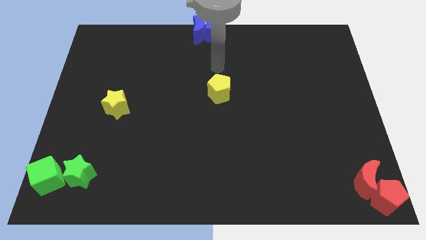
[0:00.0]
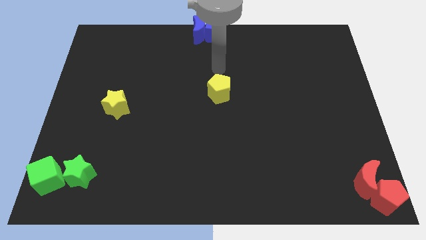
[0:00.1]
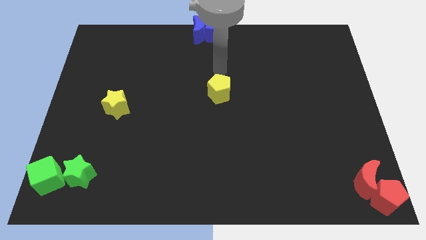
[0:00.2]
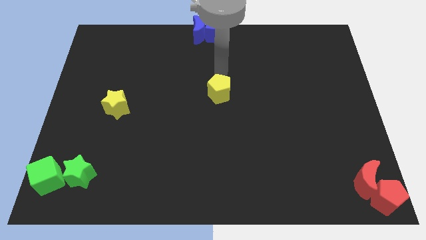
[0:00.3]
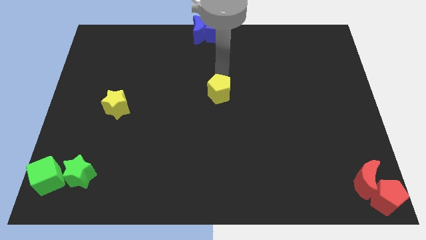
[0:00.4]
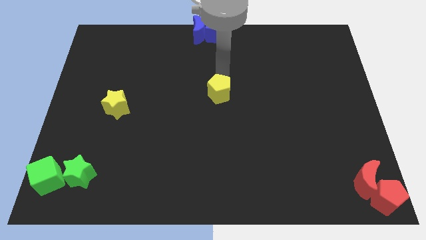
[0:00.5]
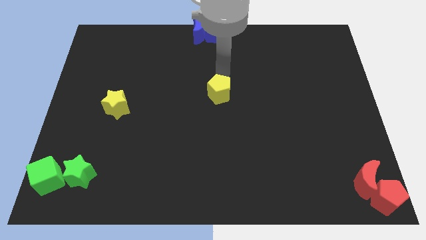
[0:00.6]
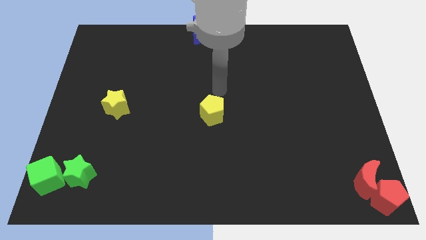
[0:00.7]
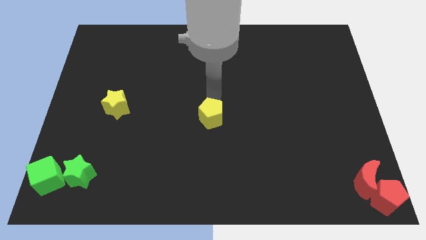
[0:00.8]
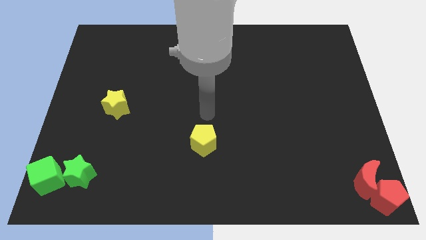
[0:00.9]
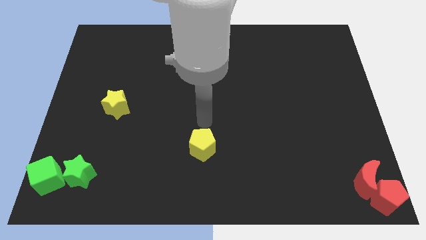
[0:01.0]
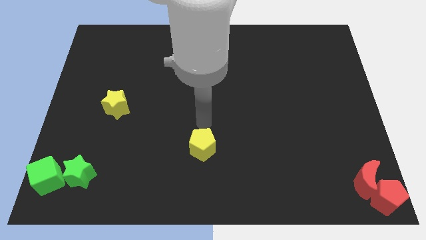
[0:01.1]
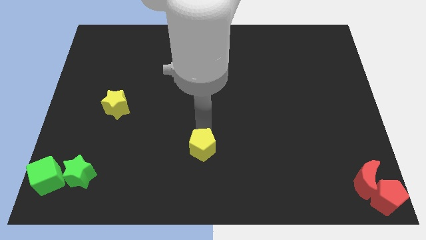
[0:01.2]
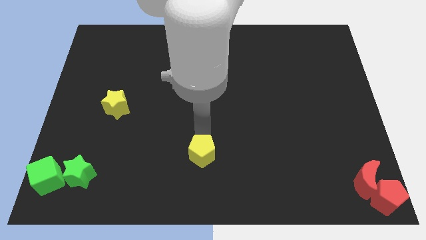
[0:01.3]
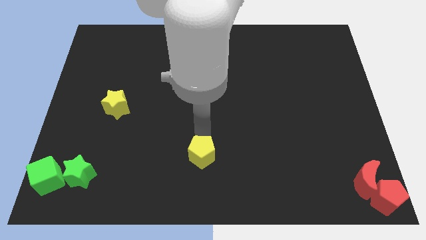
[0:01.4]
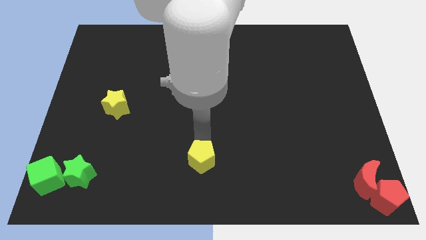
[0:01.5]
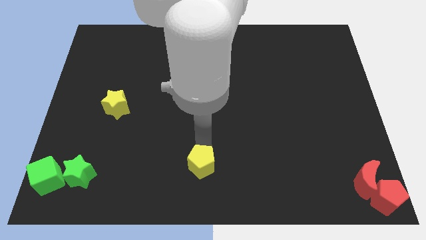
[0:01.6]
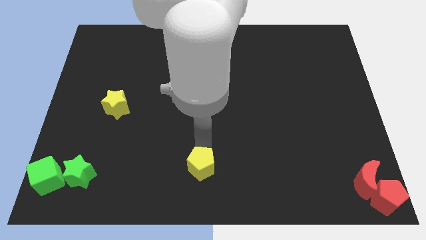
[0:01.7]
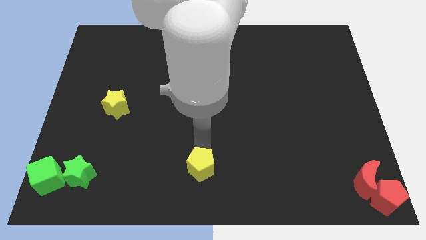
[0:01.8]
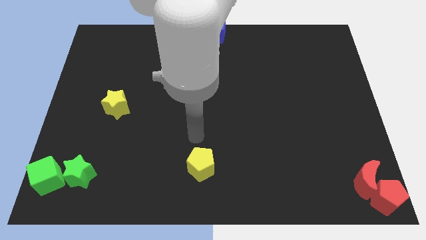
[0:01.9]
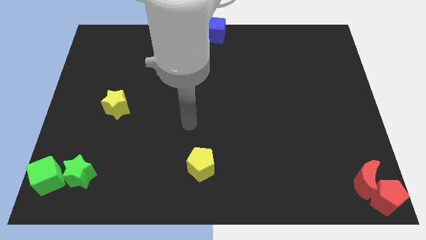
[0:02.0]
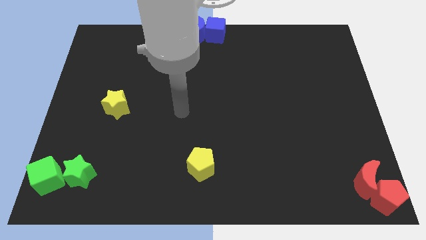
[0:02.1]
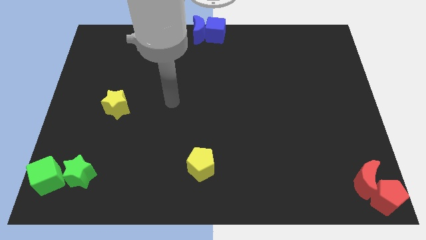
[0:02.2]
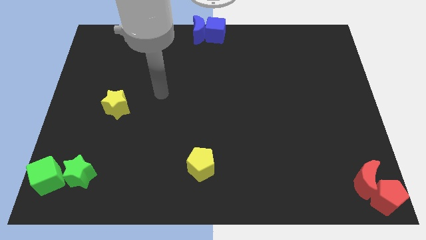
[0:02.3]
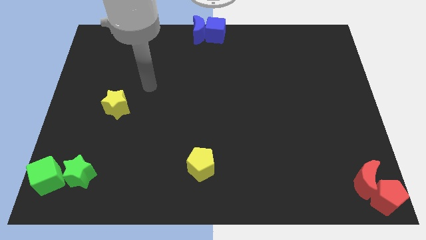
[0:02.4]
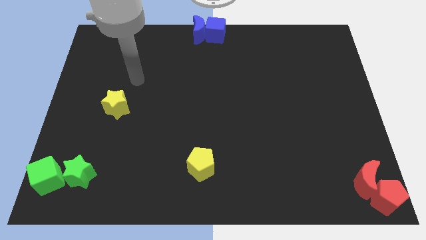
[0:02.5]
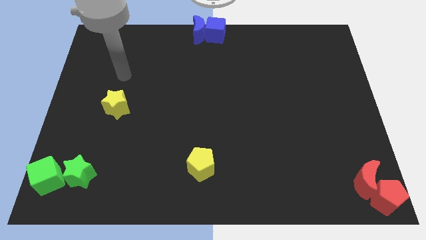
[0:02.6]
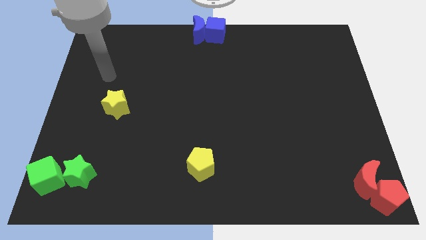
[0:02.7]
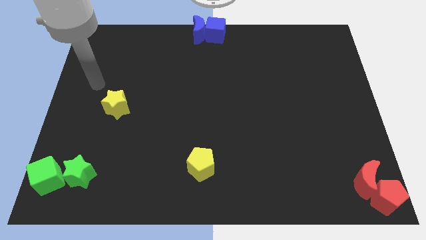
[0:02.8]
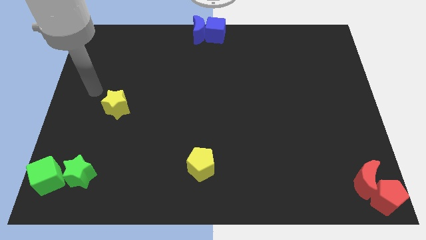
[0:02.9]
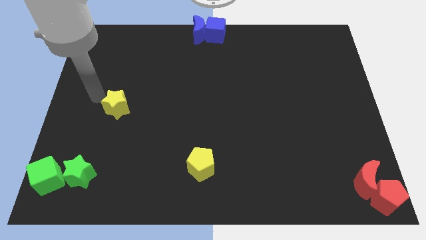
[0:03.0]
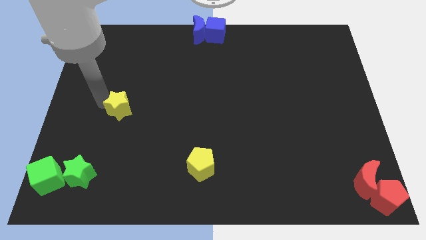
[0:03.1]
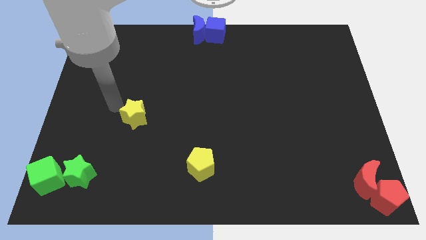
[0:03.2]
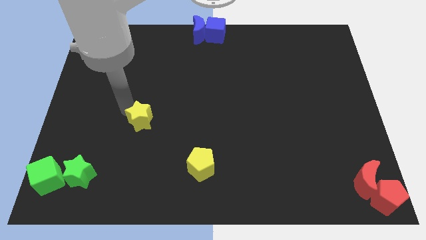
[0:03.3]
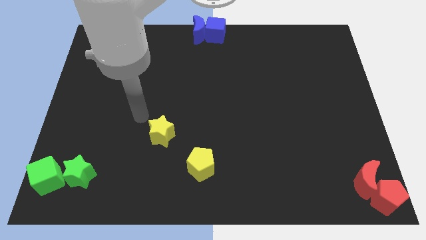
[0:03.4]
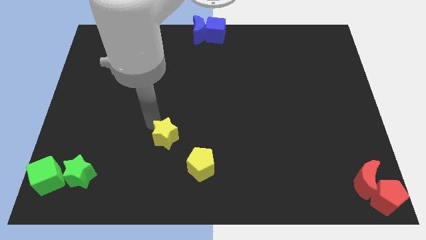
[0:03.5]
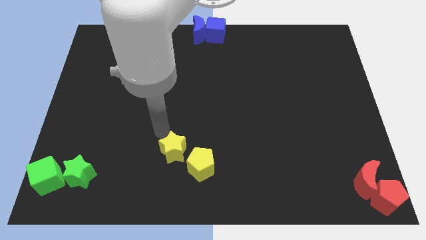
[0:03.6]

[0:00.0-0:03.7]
move the yellow pentagon and yellow stat towards the bottom center

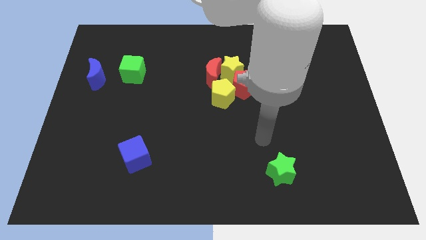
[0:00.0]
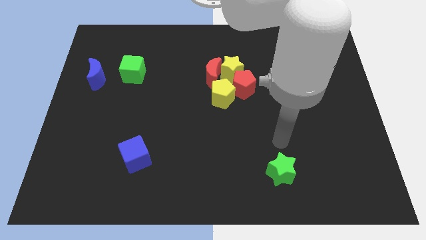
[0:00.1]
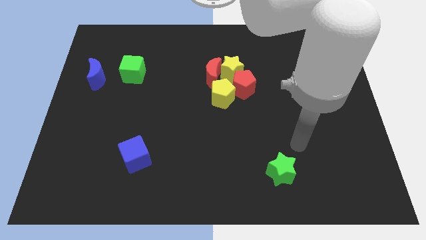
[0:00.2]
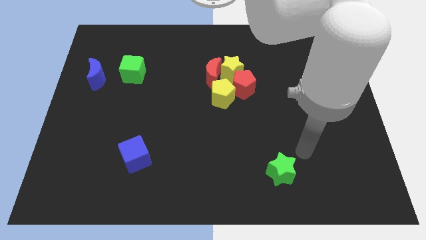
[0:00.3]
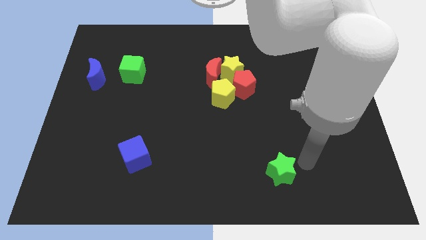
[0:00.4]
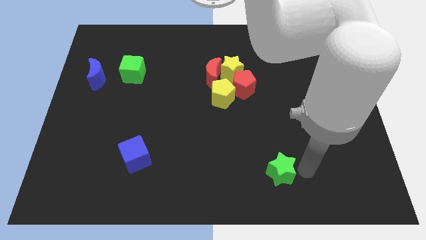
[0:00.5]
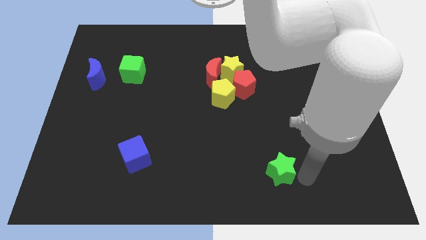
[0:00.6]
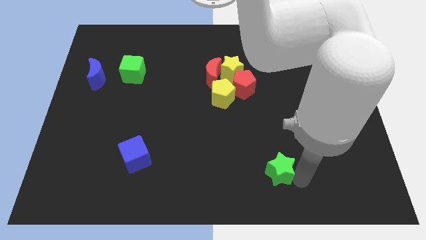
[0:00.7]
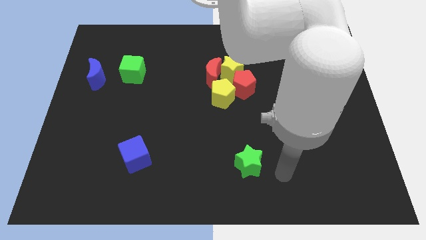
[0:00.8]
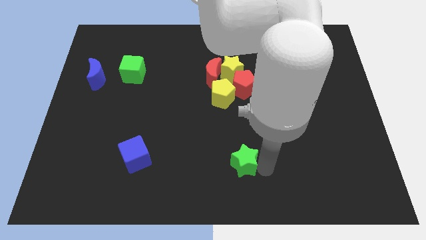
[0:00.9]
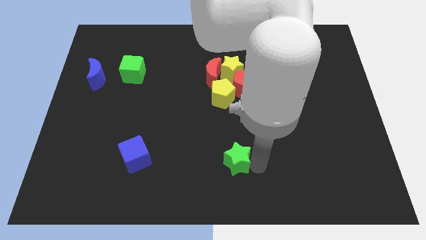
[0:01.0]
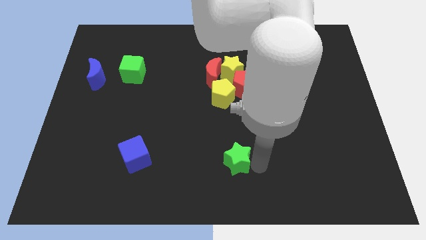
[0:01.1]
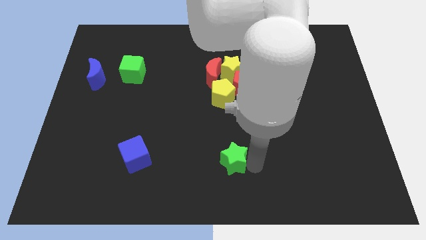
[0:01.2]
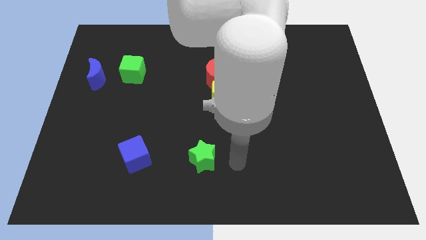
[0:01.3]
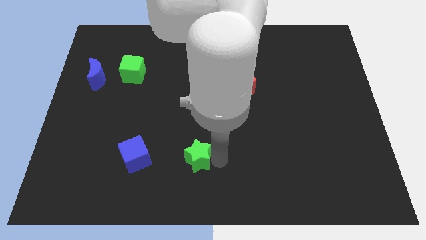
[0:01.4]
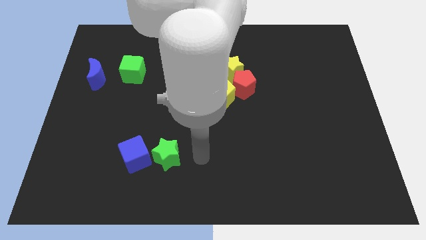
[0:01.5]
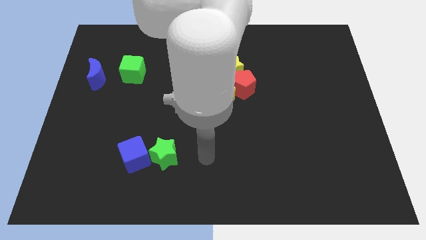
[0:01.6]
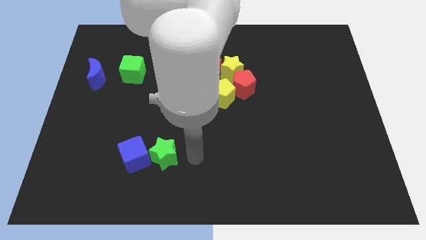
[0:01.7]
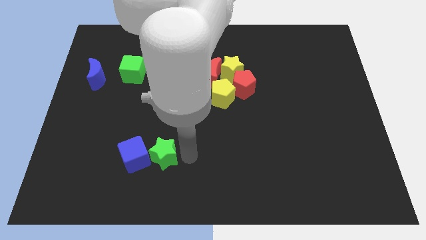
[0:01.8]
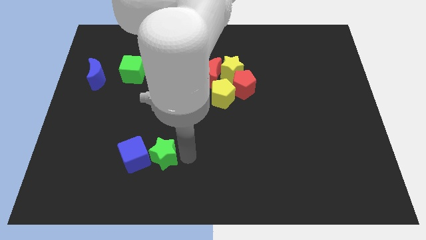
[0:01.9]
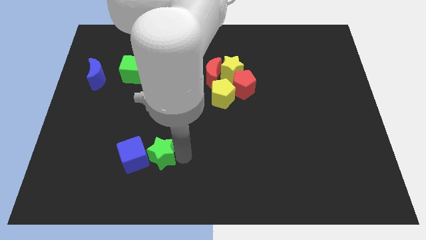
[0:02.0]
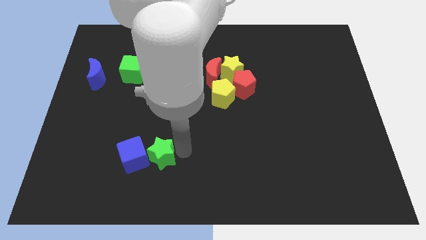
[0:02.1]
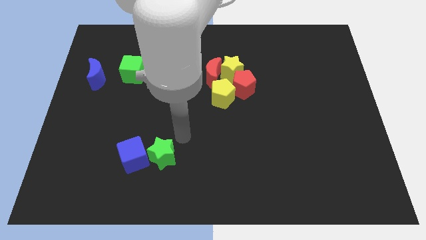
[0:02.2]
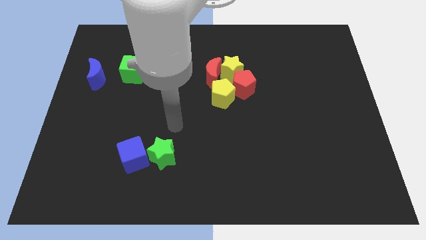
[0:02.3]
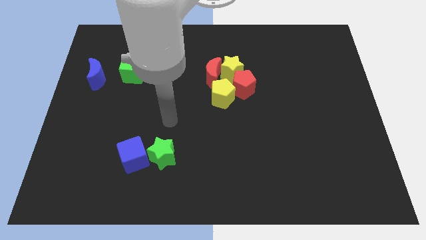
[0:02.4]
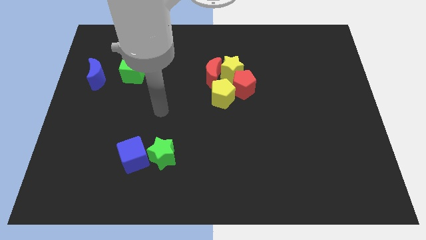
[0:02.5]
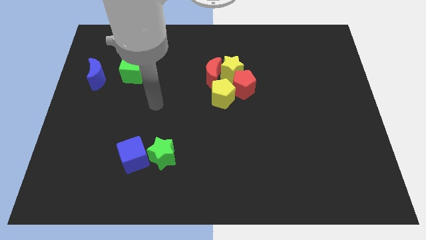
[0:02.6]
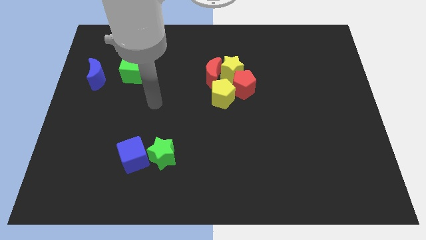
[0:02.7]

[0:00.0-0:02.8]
push the green star into blue cube

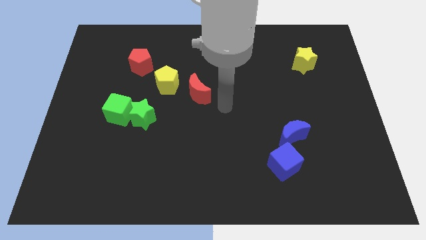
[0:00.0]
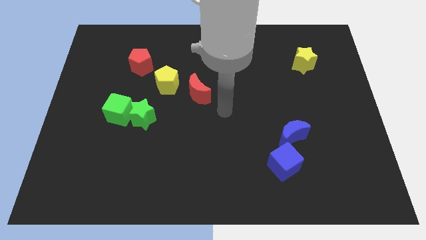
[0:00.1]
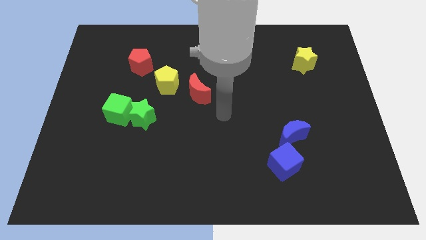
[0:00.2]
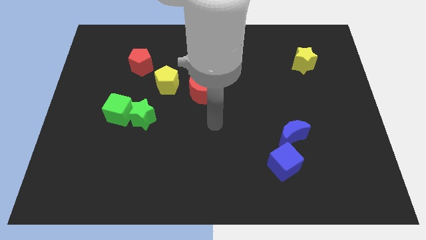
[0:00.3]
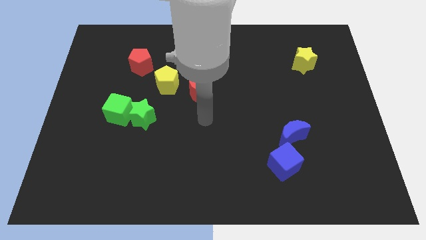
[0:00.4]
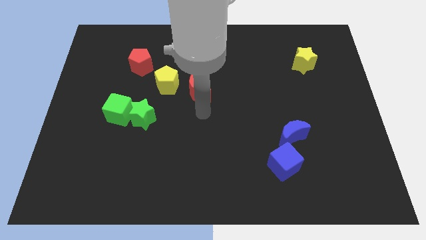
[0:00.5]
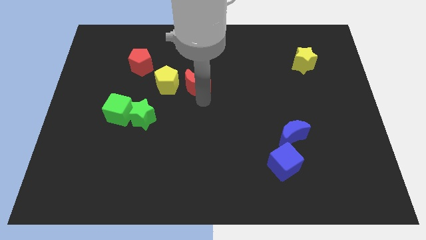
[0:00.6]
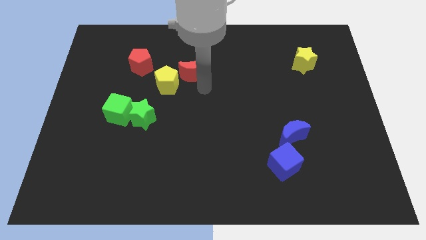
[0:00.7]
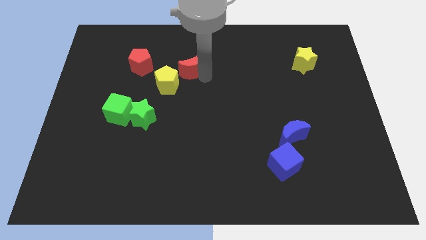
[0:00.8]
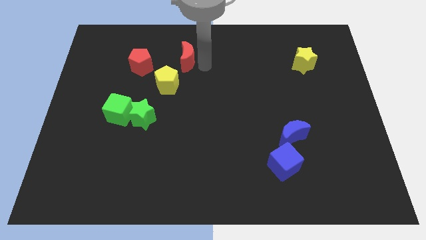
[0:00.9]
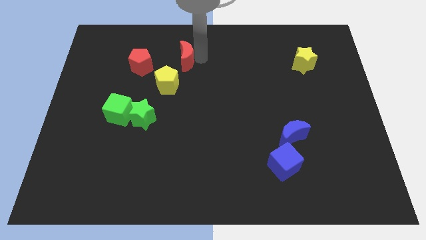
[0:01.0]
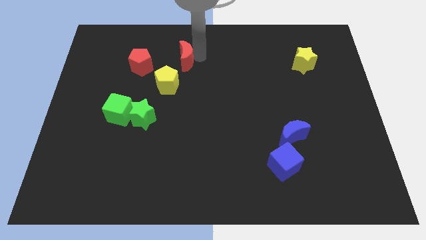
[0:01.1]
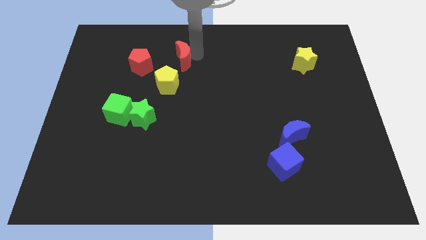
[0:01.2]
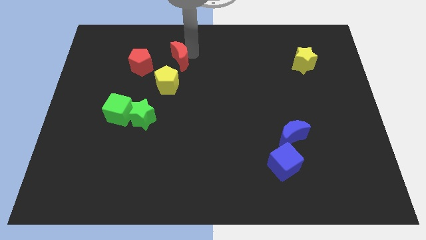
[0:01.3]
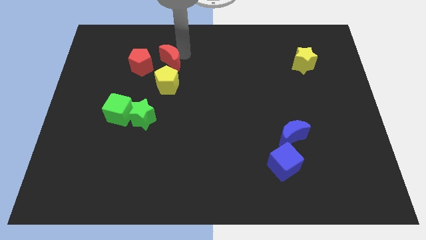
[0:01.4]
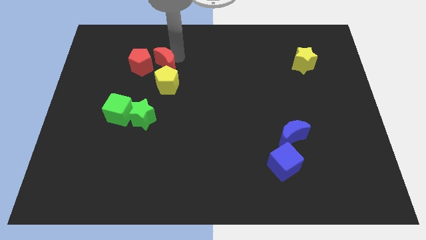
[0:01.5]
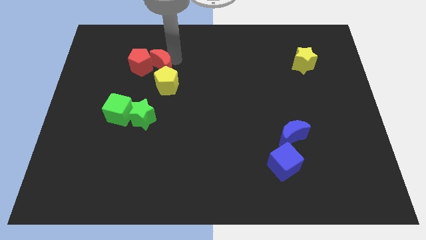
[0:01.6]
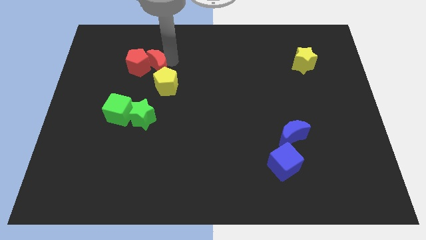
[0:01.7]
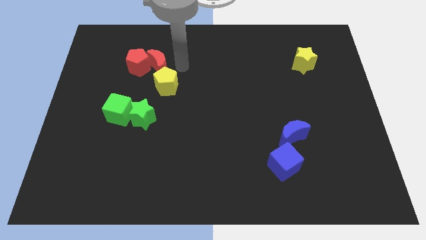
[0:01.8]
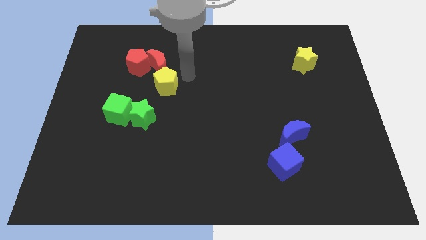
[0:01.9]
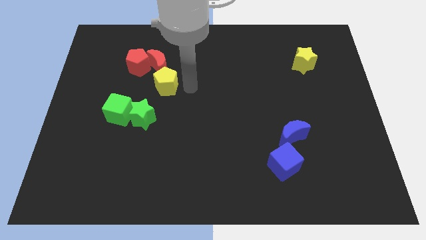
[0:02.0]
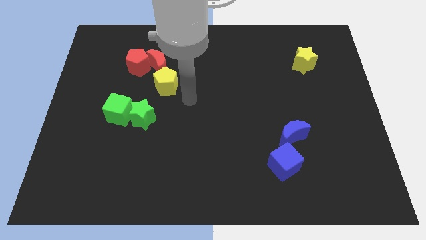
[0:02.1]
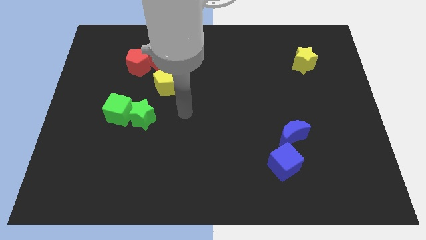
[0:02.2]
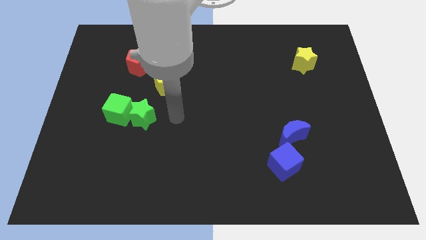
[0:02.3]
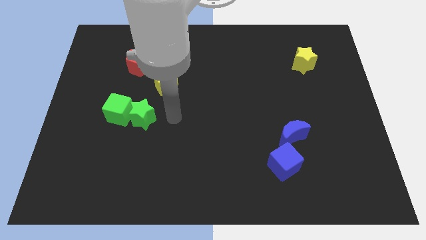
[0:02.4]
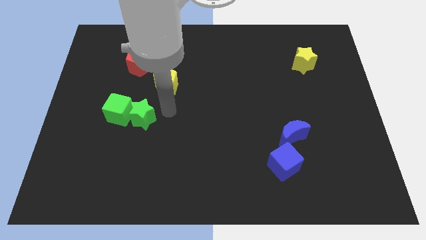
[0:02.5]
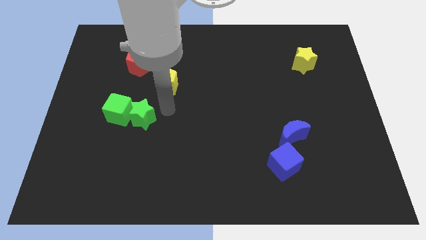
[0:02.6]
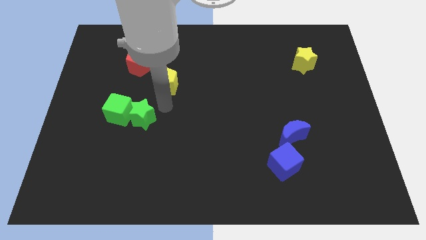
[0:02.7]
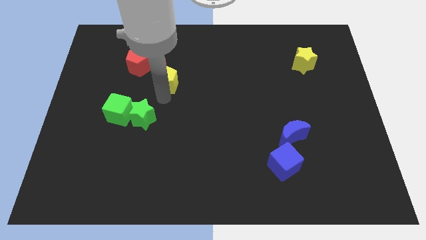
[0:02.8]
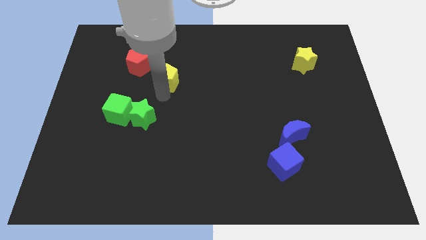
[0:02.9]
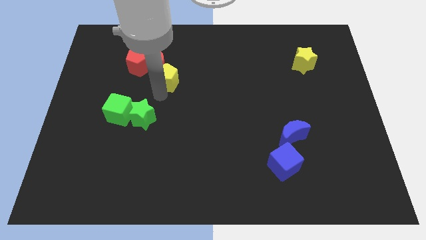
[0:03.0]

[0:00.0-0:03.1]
push the red moon to the right side of the red pentagon
